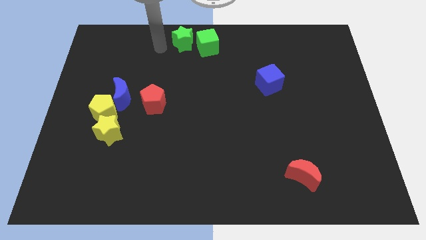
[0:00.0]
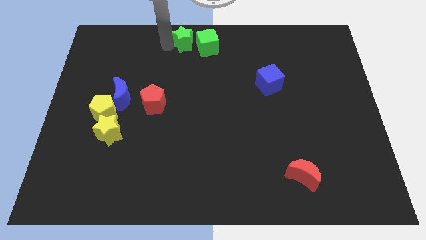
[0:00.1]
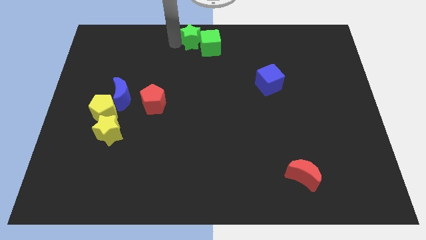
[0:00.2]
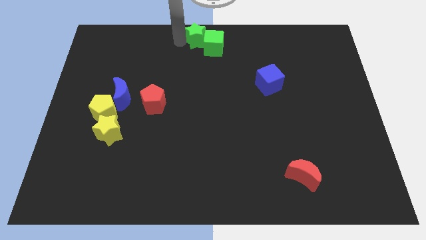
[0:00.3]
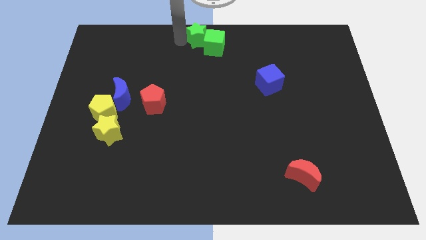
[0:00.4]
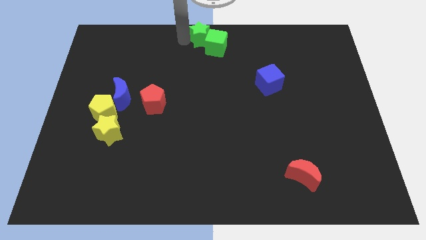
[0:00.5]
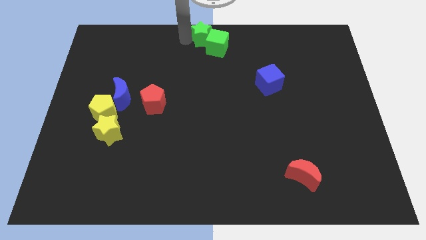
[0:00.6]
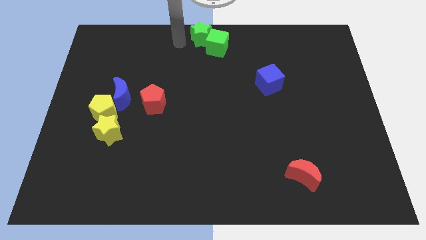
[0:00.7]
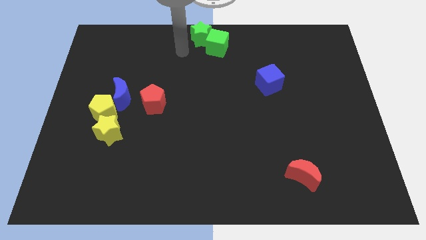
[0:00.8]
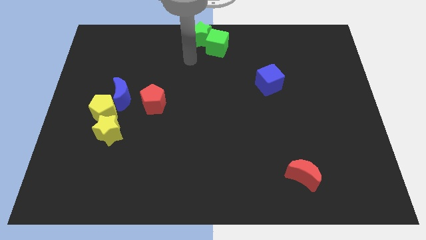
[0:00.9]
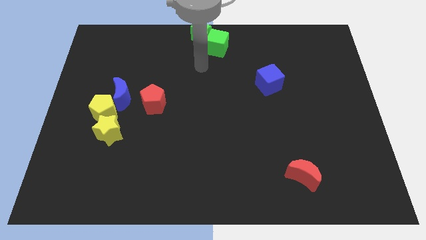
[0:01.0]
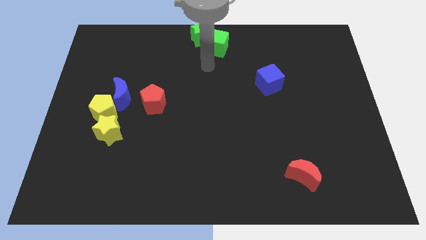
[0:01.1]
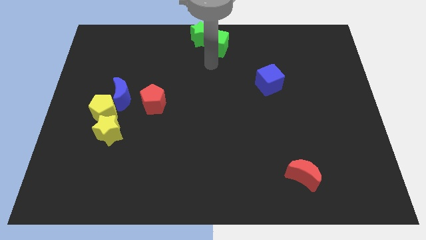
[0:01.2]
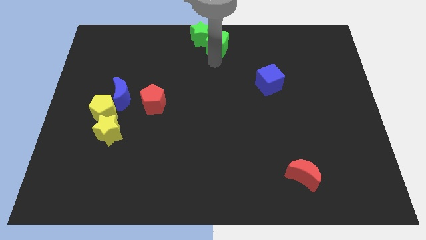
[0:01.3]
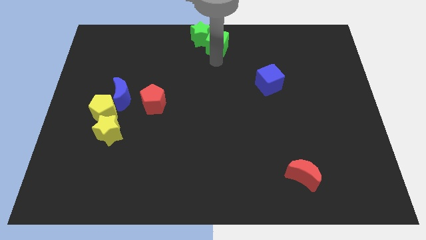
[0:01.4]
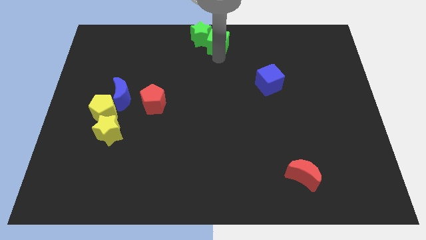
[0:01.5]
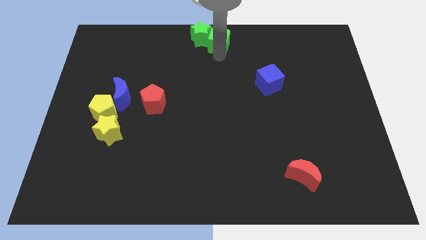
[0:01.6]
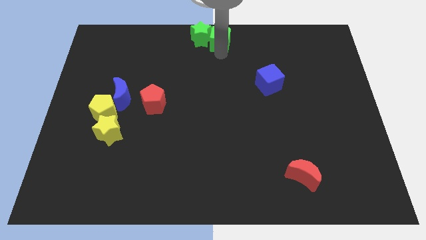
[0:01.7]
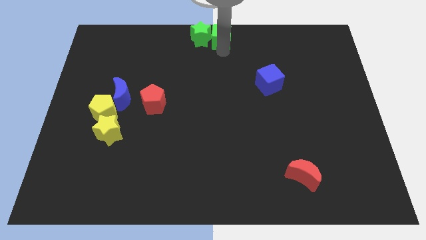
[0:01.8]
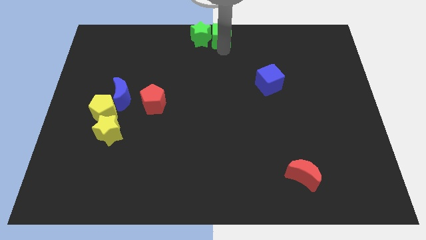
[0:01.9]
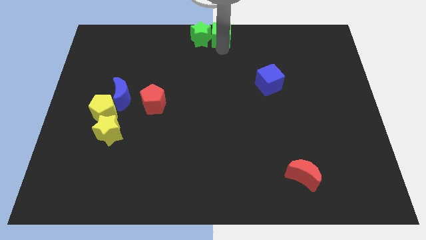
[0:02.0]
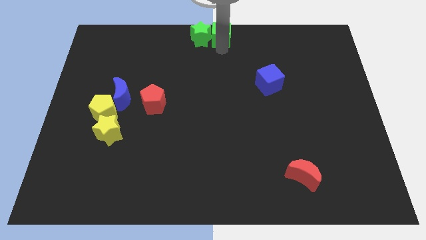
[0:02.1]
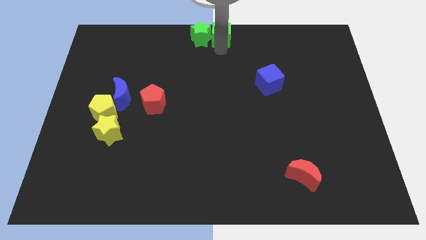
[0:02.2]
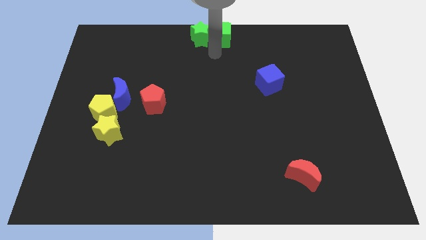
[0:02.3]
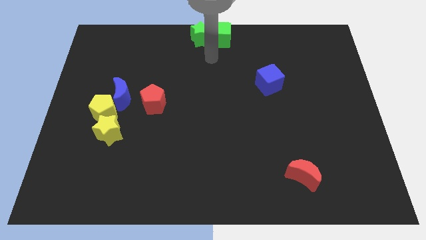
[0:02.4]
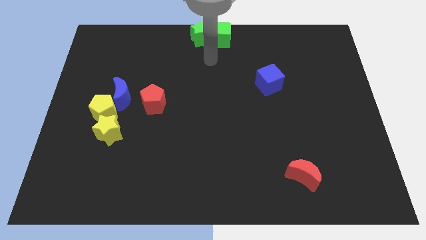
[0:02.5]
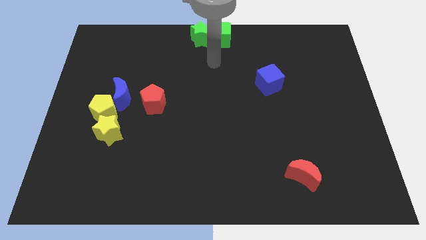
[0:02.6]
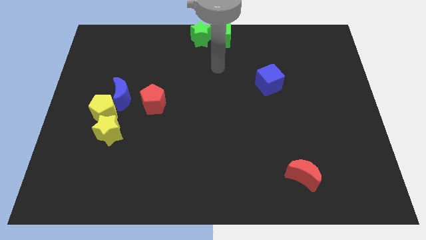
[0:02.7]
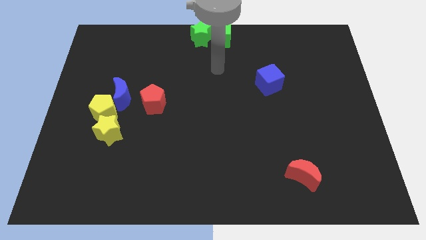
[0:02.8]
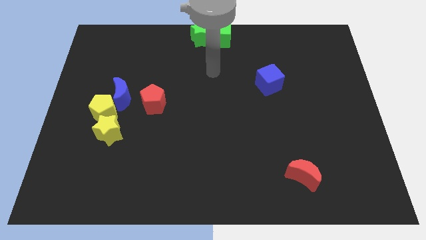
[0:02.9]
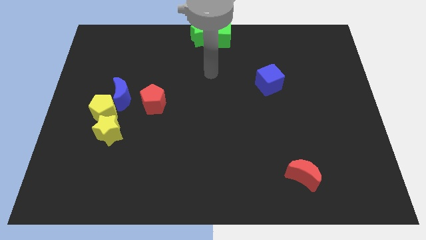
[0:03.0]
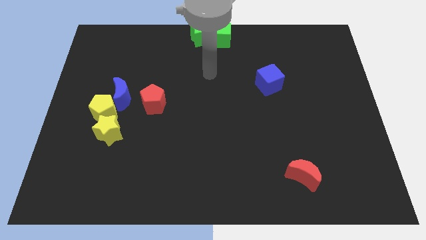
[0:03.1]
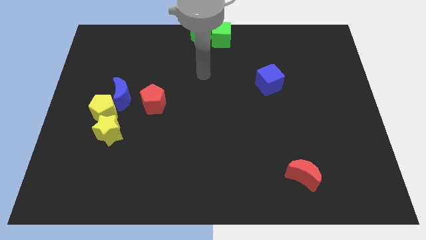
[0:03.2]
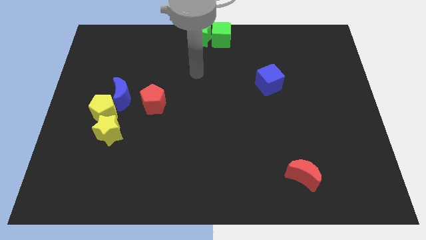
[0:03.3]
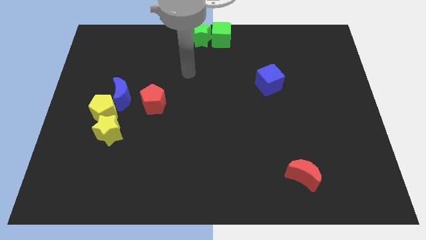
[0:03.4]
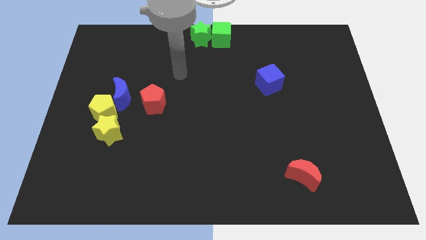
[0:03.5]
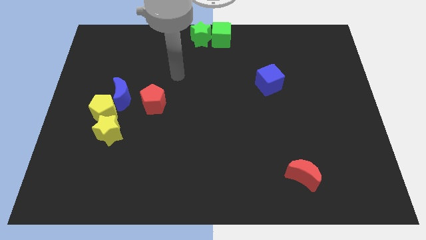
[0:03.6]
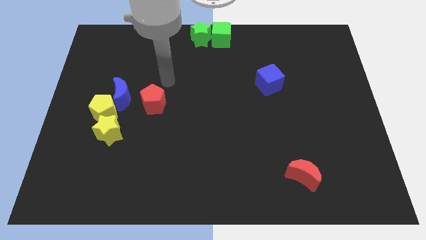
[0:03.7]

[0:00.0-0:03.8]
move the green star into the green cube

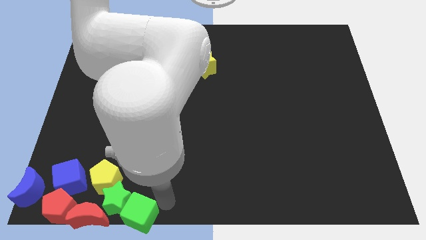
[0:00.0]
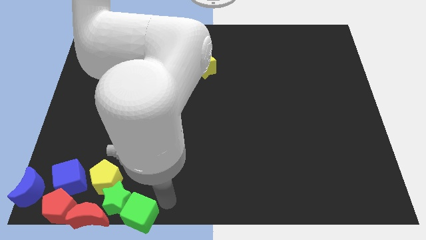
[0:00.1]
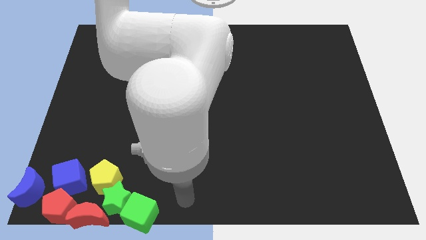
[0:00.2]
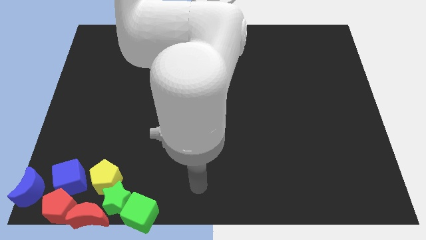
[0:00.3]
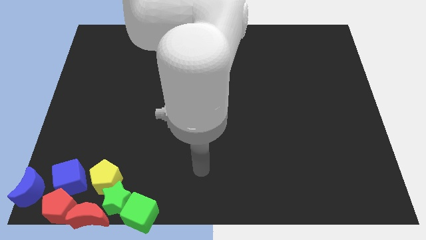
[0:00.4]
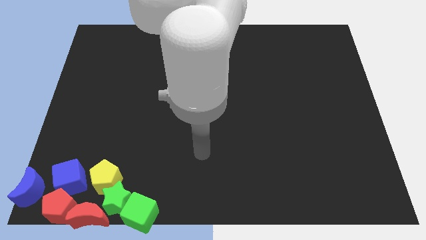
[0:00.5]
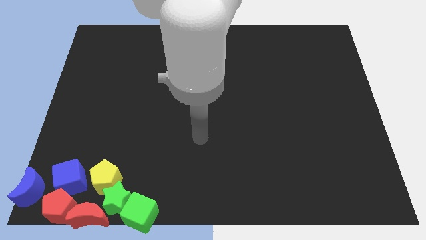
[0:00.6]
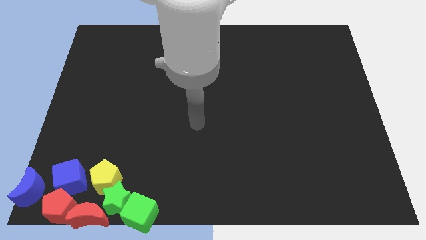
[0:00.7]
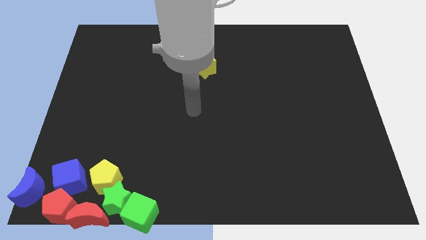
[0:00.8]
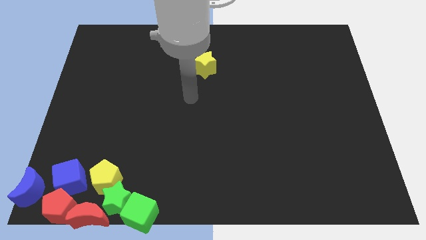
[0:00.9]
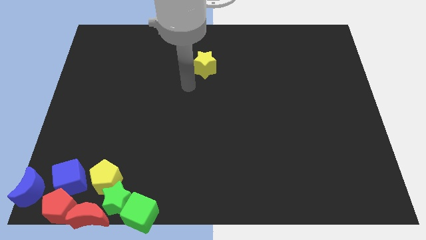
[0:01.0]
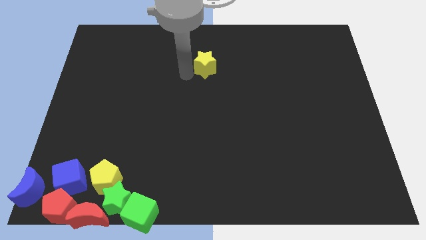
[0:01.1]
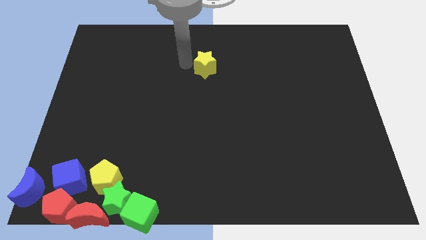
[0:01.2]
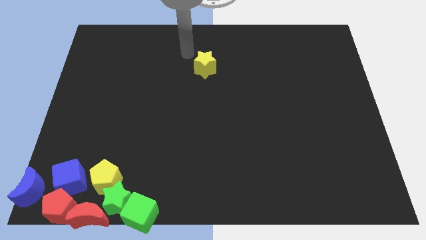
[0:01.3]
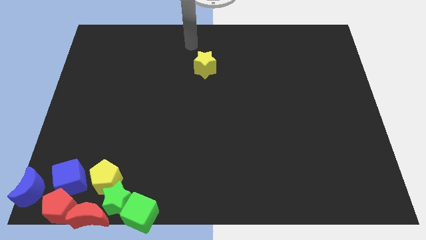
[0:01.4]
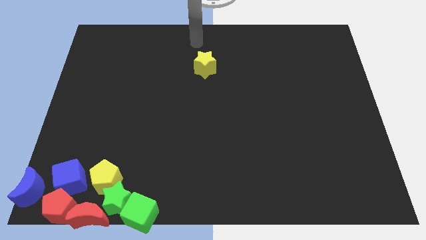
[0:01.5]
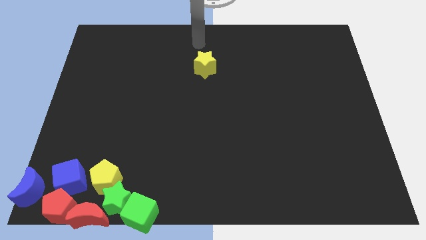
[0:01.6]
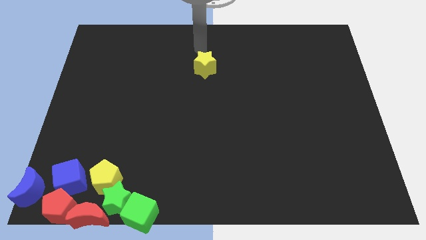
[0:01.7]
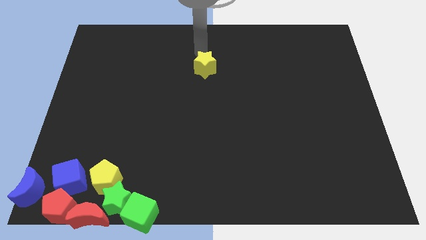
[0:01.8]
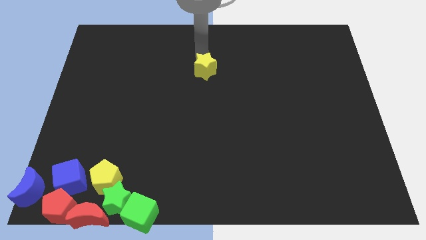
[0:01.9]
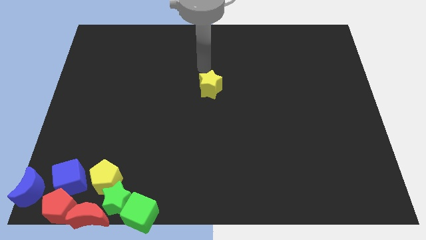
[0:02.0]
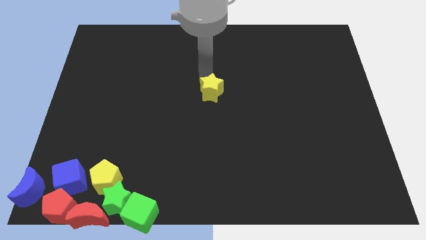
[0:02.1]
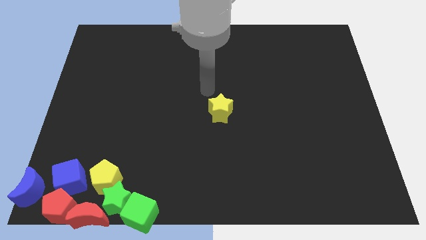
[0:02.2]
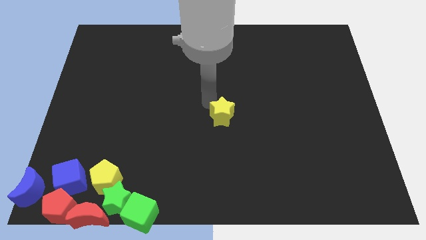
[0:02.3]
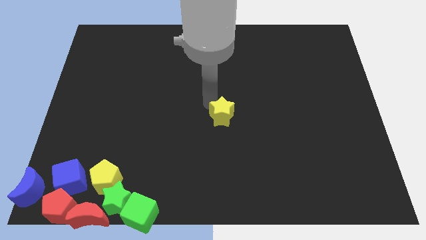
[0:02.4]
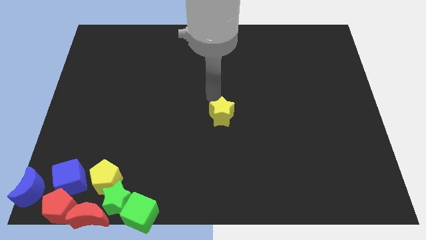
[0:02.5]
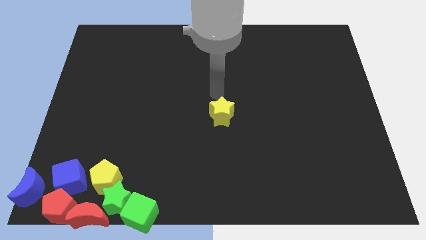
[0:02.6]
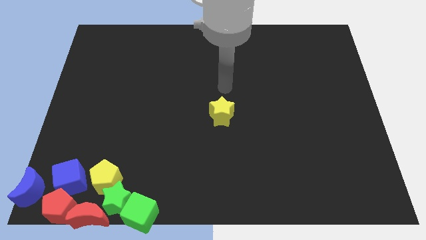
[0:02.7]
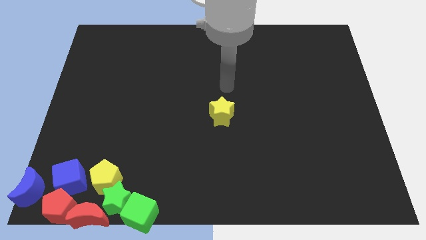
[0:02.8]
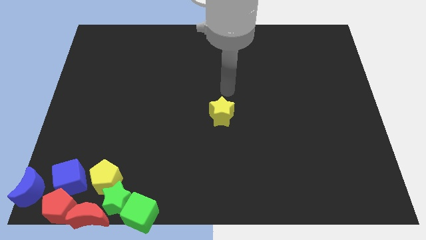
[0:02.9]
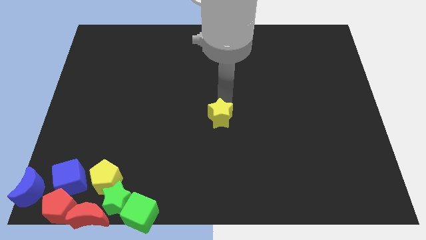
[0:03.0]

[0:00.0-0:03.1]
bring the yellow star at the center of the table

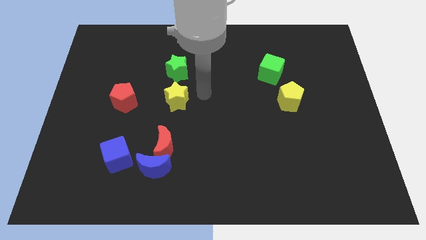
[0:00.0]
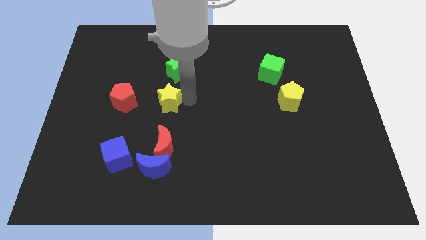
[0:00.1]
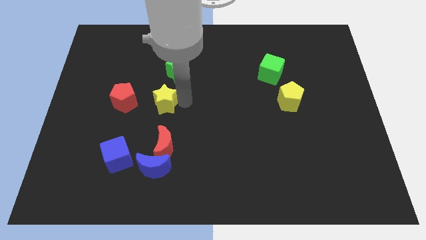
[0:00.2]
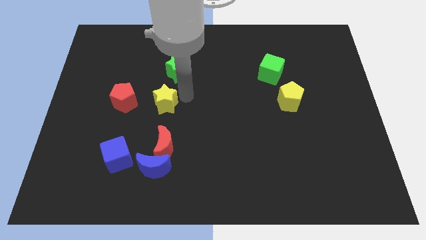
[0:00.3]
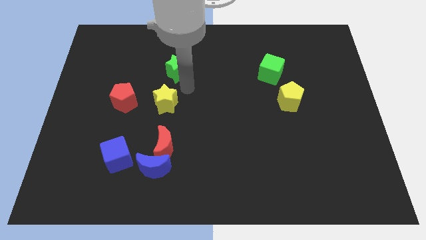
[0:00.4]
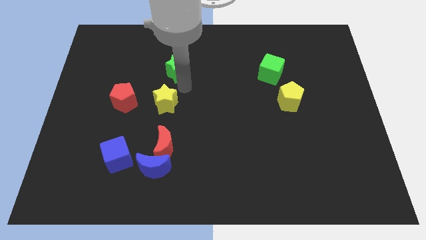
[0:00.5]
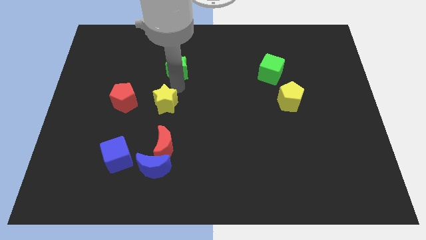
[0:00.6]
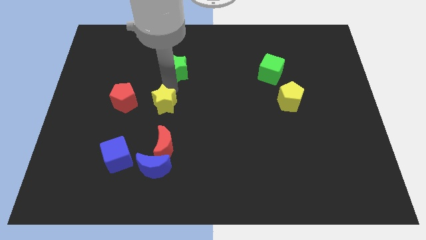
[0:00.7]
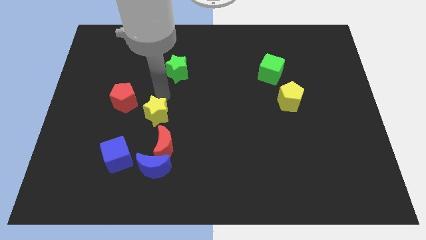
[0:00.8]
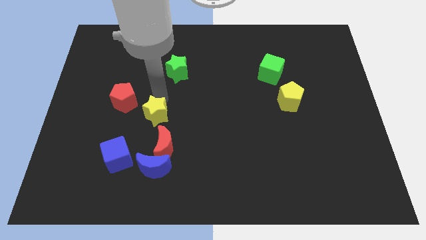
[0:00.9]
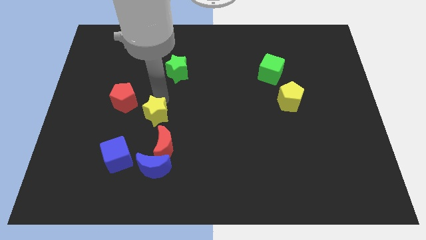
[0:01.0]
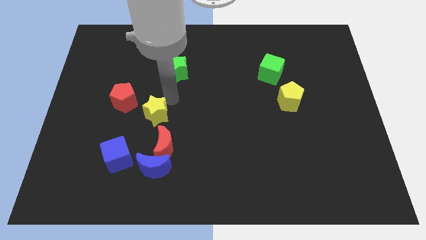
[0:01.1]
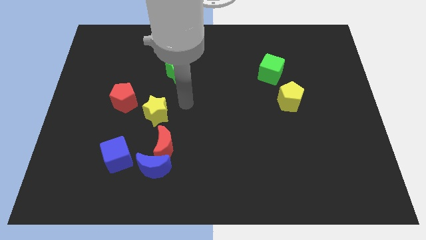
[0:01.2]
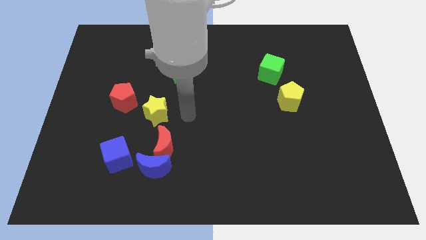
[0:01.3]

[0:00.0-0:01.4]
move the yellow star to the top side of the red moon

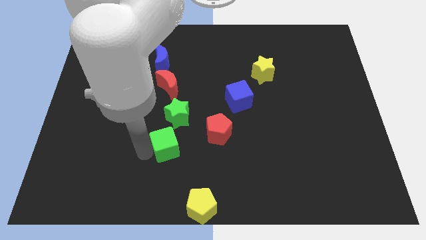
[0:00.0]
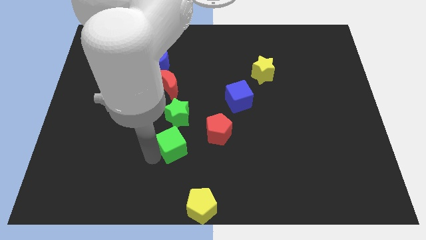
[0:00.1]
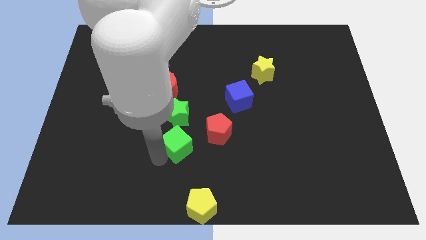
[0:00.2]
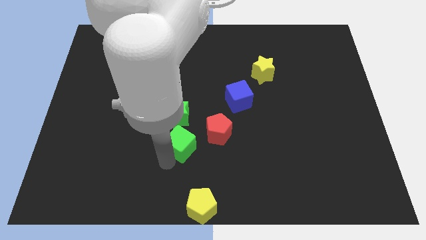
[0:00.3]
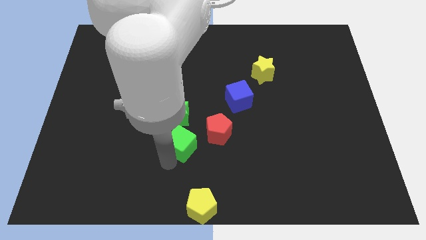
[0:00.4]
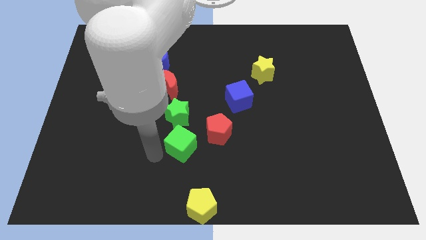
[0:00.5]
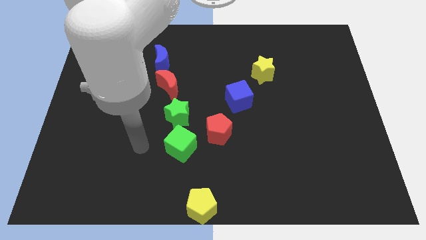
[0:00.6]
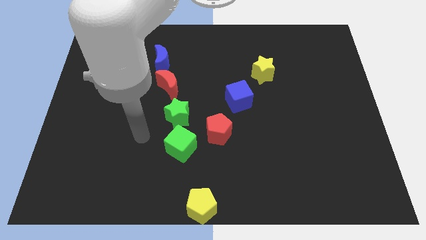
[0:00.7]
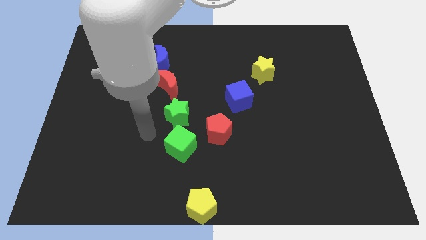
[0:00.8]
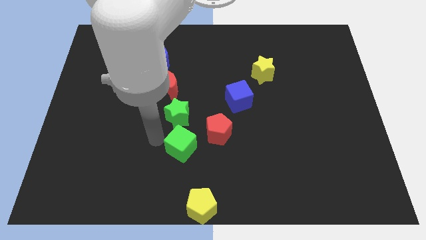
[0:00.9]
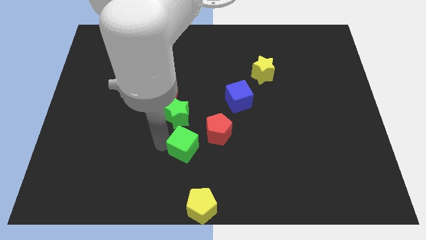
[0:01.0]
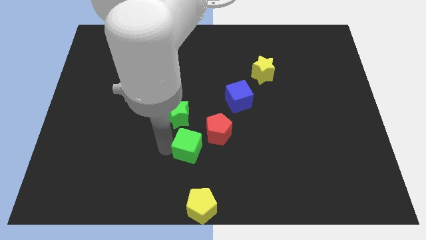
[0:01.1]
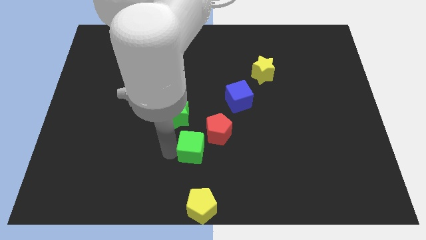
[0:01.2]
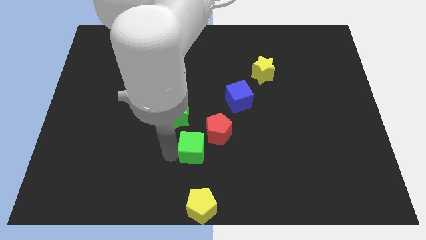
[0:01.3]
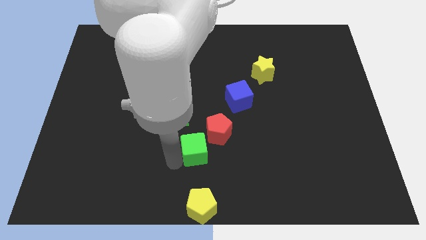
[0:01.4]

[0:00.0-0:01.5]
push the green cube vertical to the green star
